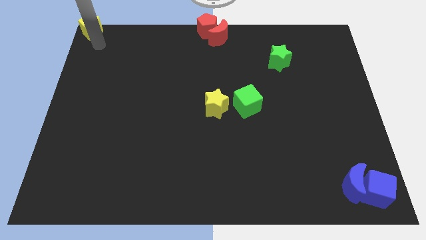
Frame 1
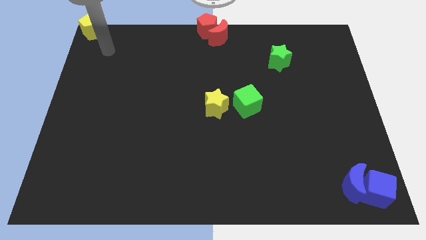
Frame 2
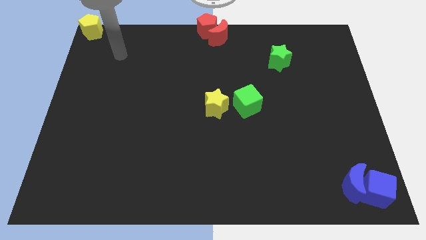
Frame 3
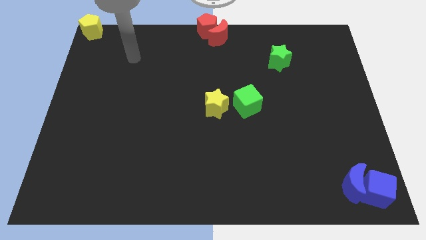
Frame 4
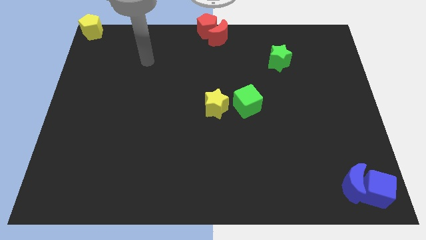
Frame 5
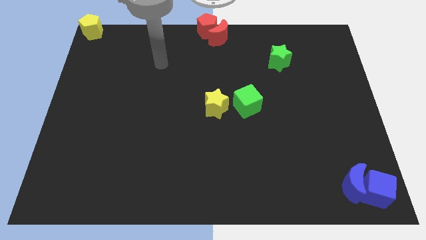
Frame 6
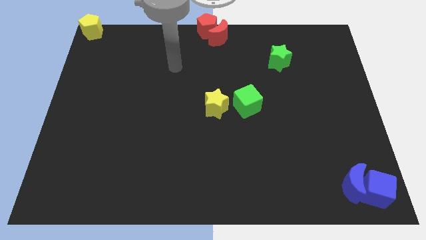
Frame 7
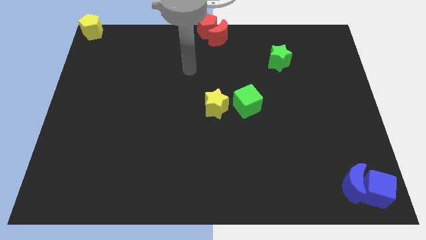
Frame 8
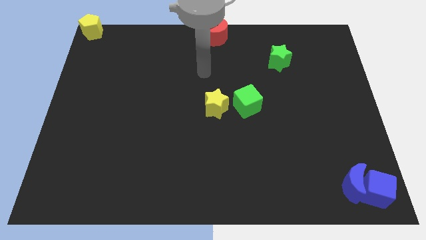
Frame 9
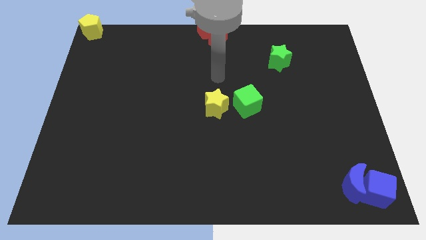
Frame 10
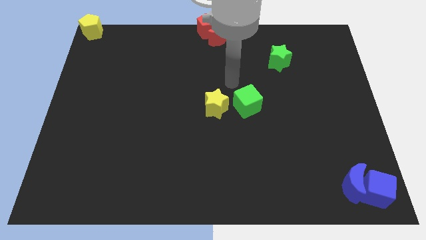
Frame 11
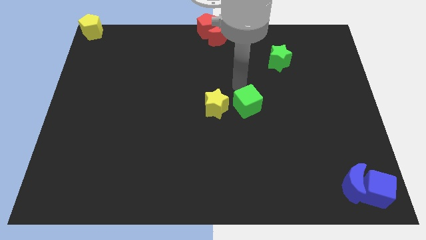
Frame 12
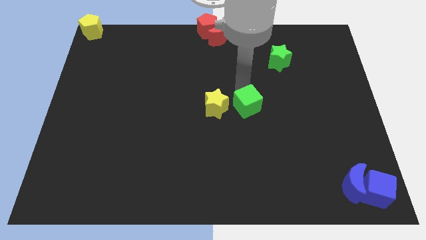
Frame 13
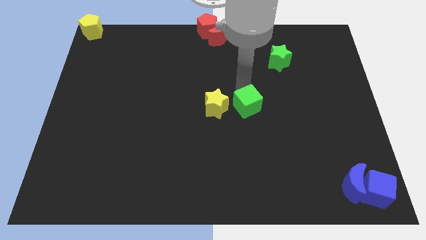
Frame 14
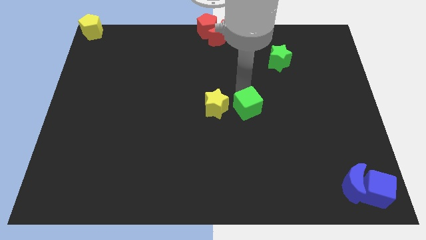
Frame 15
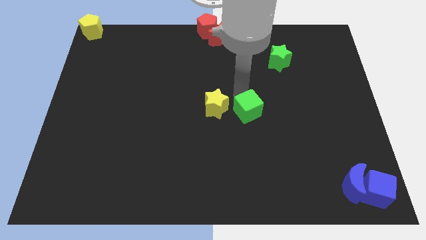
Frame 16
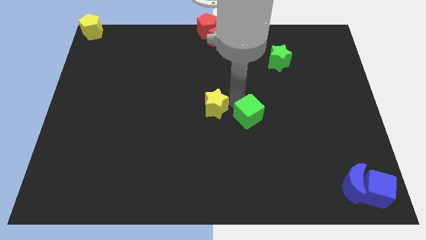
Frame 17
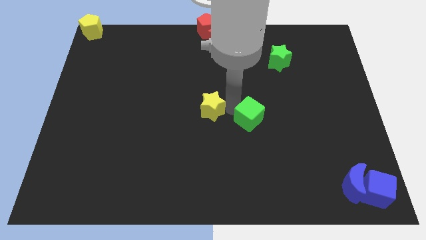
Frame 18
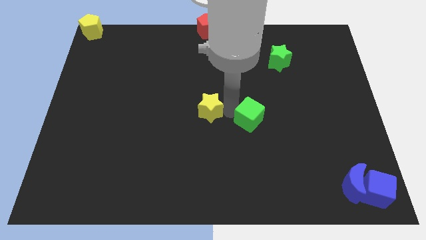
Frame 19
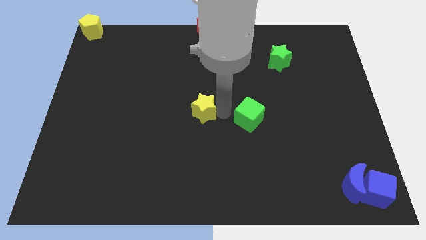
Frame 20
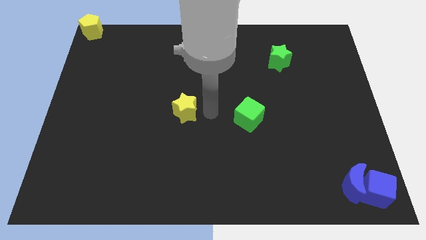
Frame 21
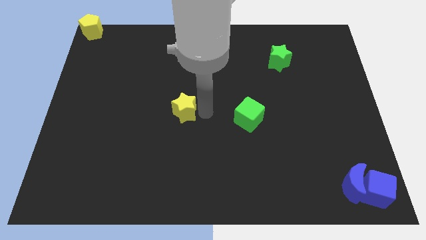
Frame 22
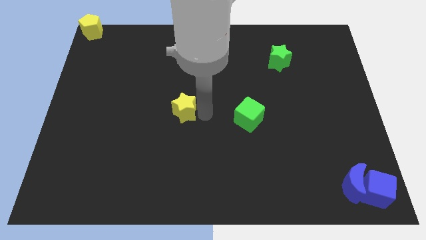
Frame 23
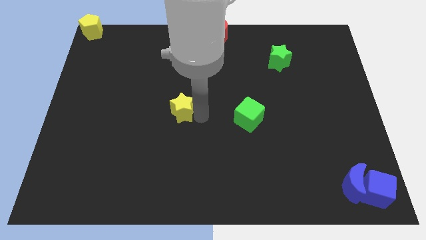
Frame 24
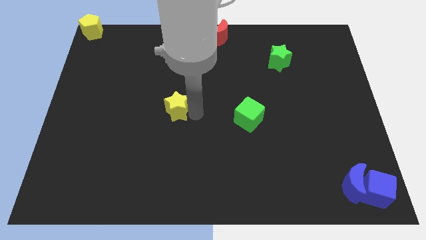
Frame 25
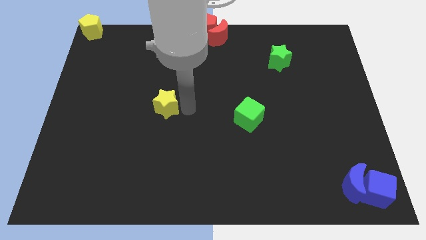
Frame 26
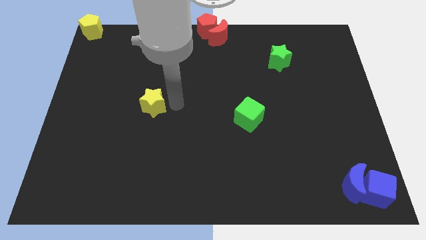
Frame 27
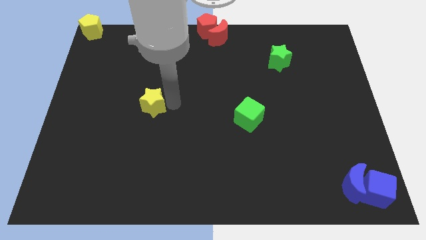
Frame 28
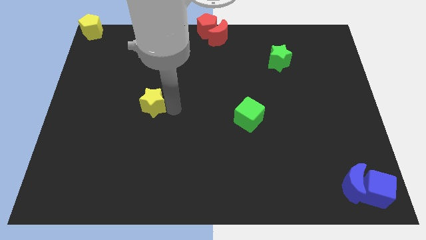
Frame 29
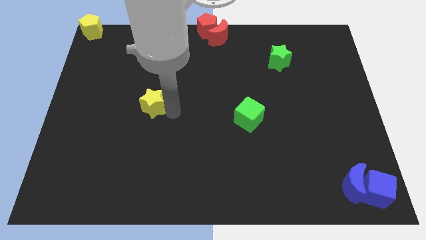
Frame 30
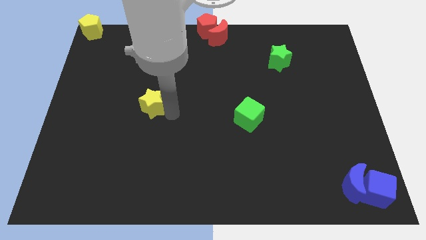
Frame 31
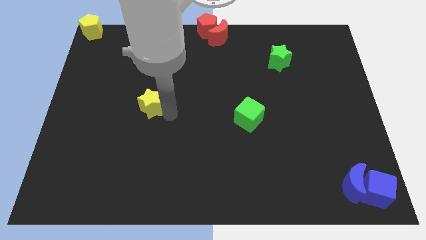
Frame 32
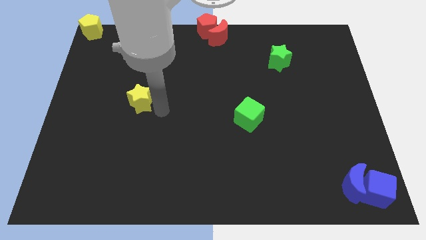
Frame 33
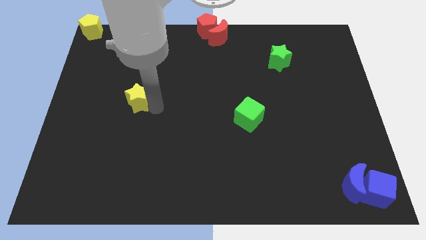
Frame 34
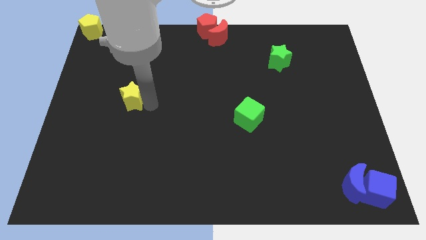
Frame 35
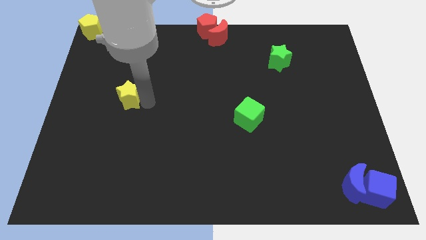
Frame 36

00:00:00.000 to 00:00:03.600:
push the yellow star towards the center left of the board

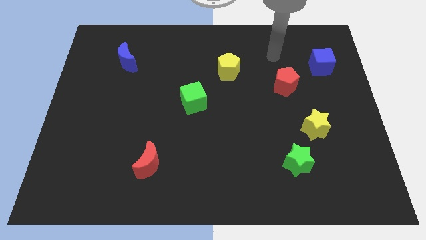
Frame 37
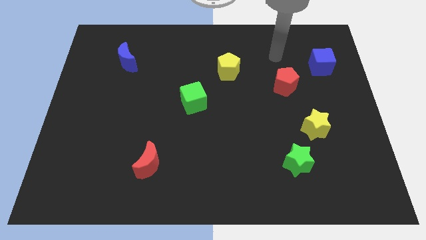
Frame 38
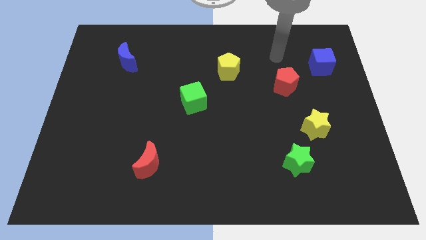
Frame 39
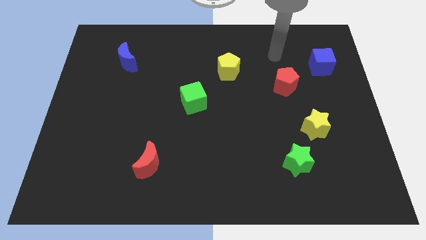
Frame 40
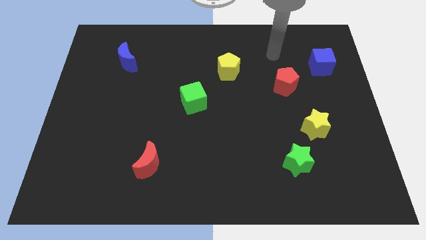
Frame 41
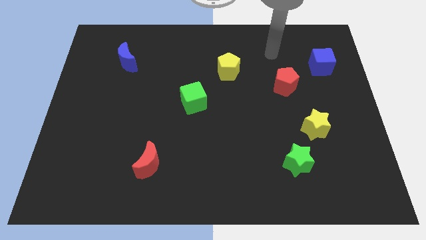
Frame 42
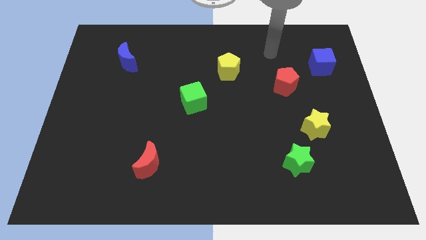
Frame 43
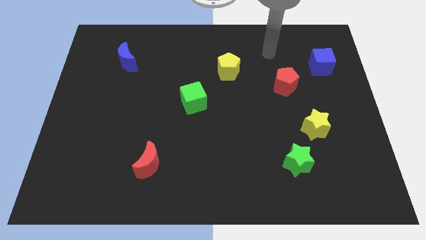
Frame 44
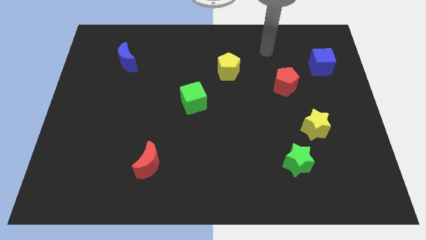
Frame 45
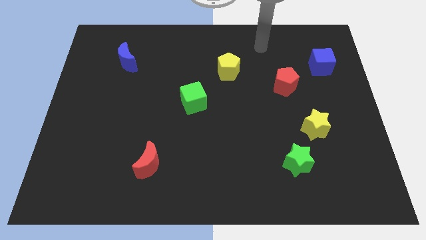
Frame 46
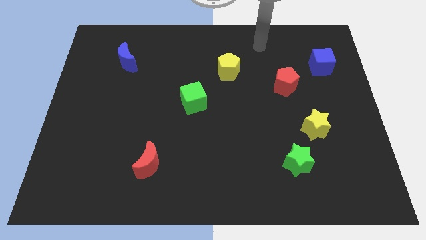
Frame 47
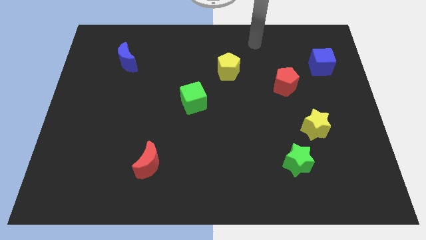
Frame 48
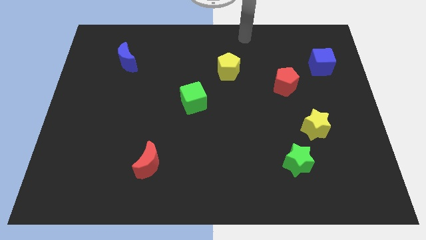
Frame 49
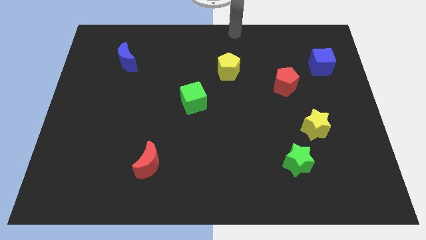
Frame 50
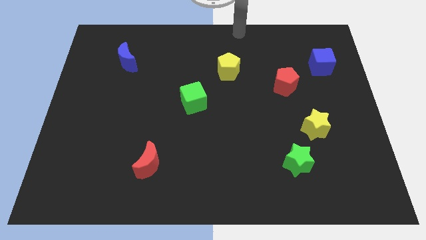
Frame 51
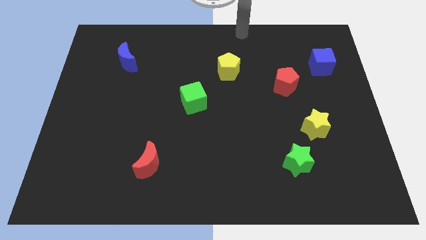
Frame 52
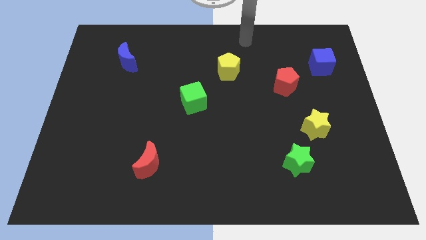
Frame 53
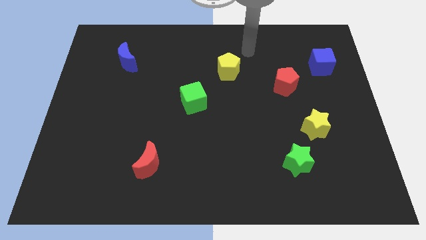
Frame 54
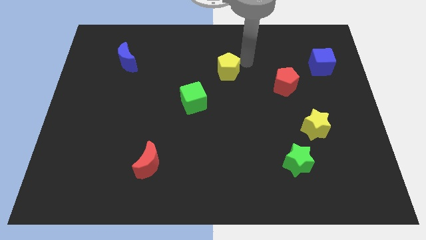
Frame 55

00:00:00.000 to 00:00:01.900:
touch at the right side of the yellow pentagon

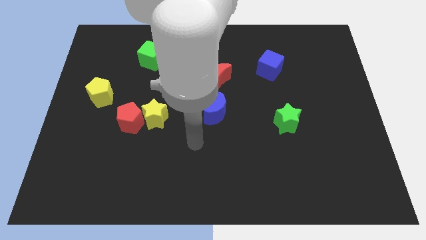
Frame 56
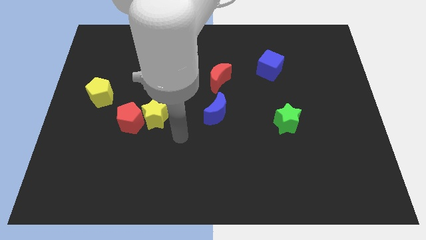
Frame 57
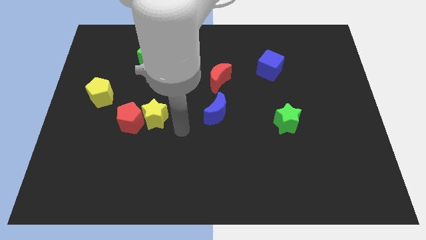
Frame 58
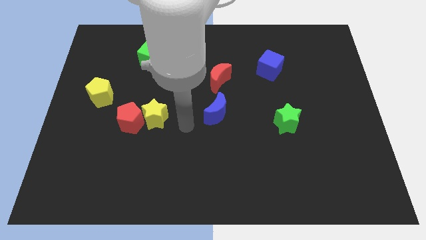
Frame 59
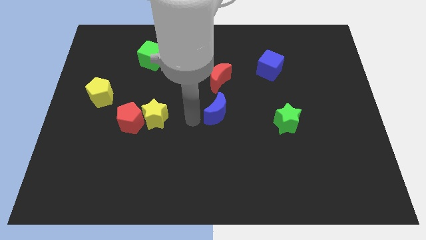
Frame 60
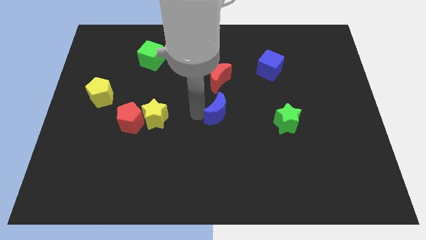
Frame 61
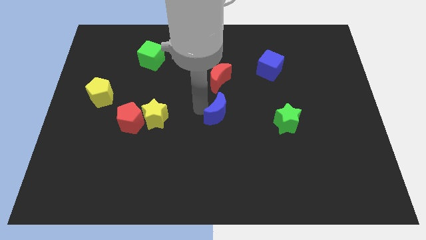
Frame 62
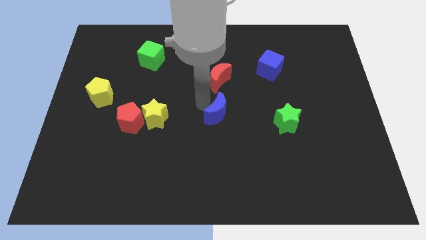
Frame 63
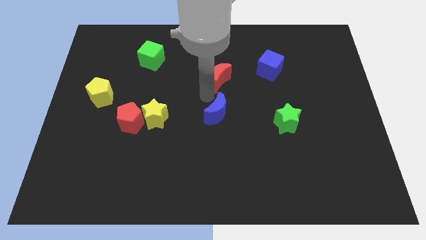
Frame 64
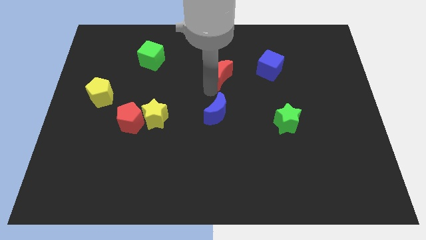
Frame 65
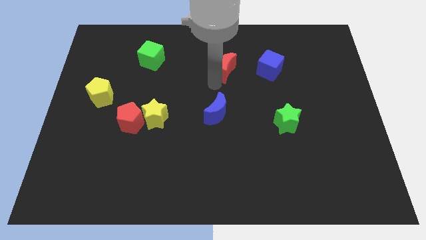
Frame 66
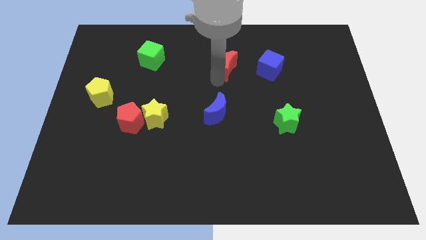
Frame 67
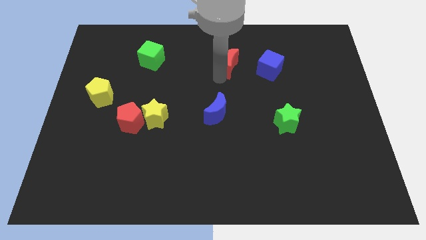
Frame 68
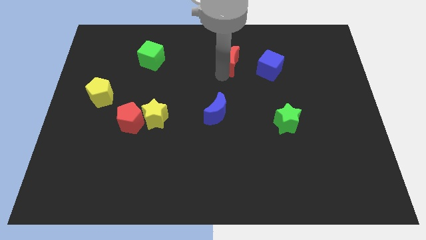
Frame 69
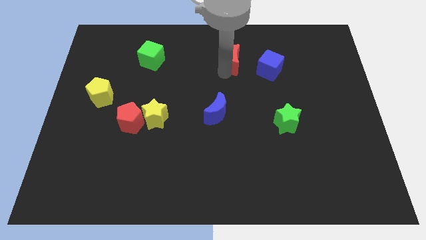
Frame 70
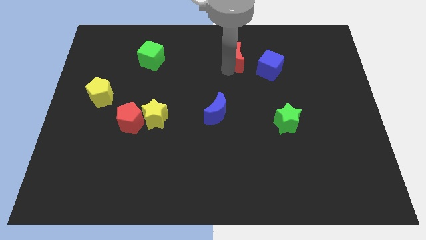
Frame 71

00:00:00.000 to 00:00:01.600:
place the red moon left to the blue cube

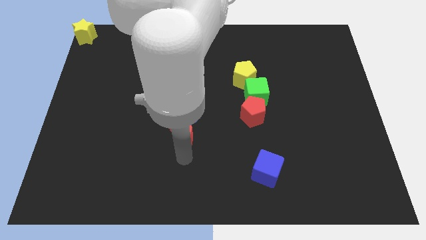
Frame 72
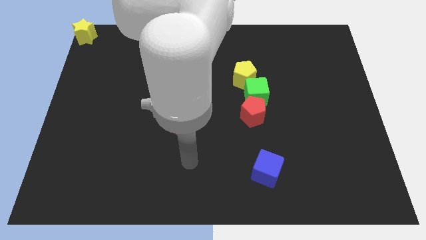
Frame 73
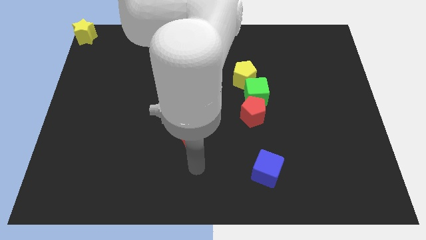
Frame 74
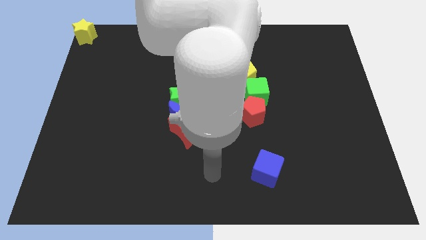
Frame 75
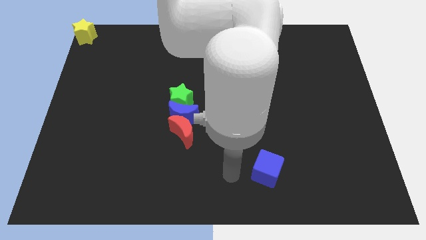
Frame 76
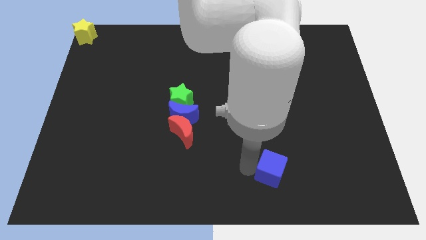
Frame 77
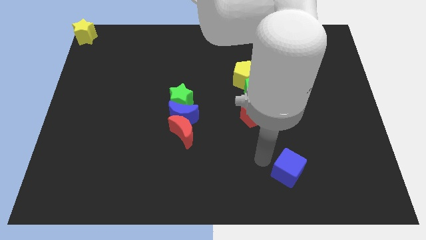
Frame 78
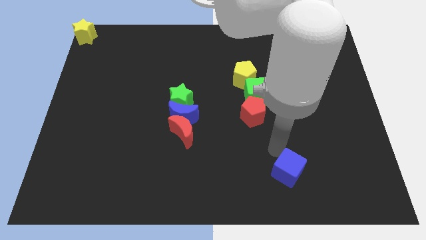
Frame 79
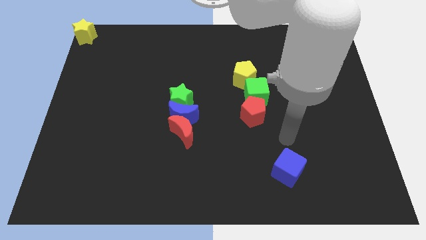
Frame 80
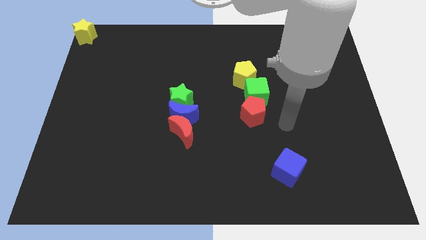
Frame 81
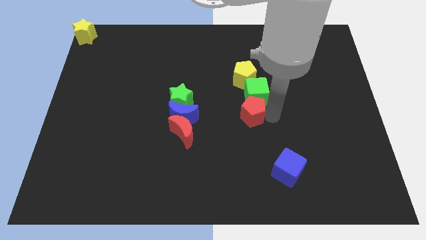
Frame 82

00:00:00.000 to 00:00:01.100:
slightly push the blue cube towards the right side of the board

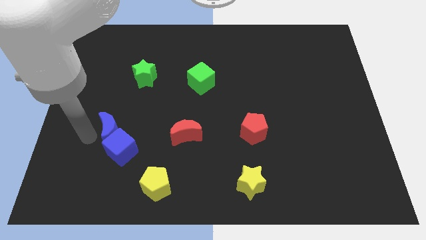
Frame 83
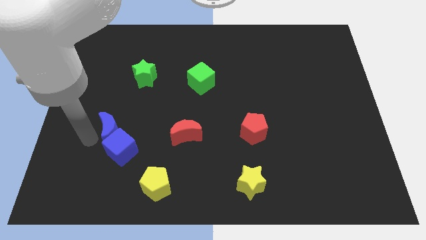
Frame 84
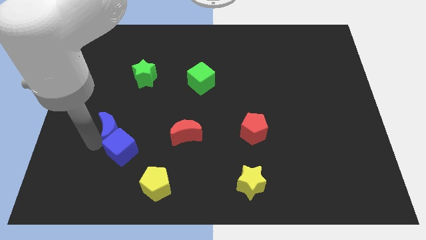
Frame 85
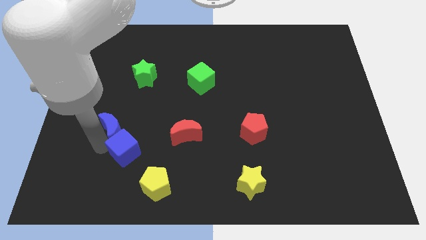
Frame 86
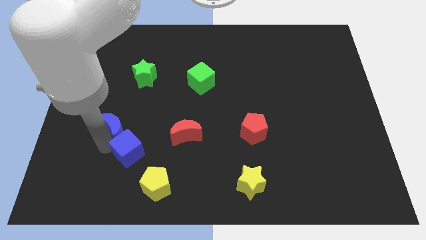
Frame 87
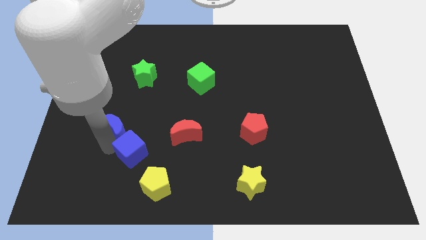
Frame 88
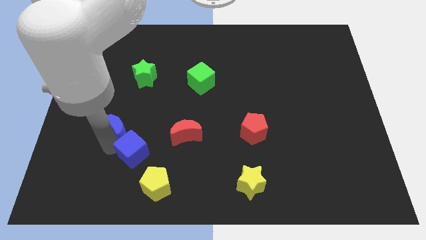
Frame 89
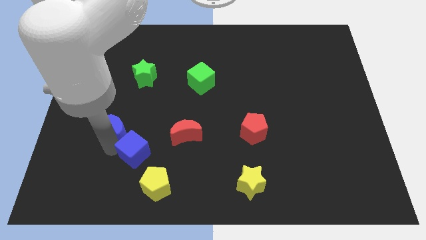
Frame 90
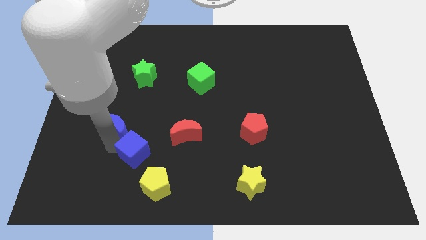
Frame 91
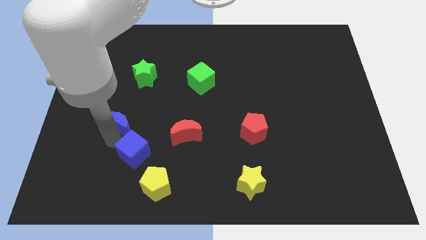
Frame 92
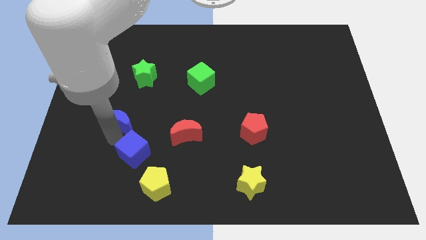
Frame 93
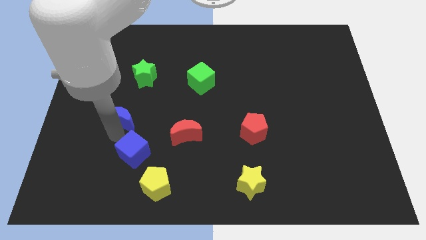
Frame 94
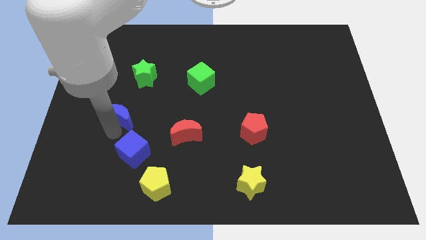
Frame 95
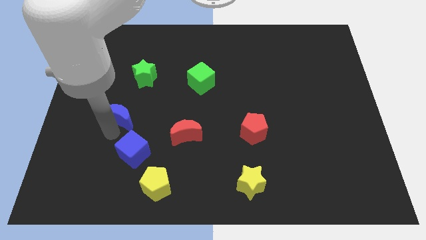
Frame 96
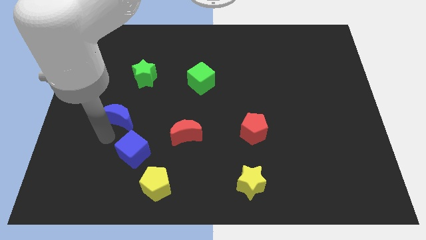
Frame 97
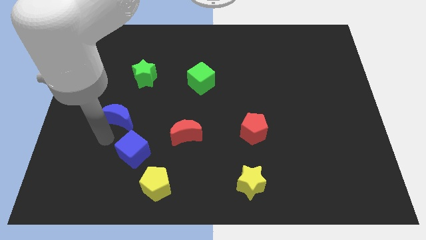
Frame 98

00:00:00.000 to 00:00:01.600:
separate blue moon and the blue cube
